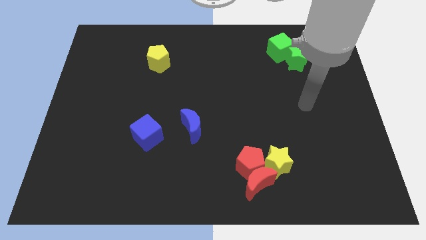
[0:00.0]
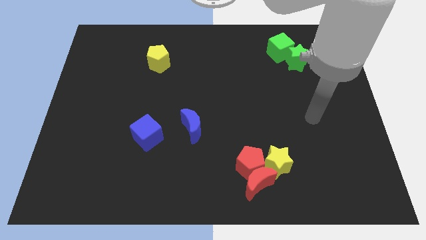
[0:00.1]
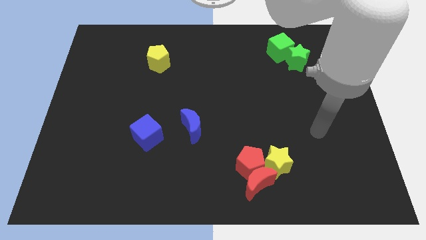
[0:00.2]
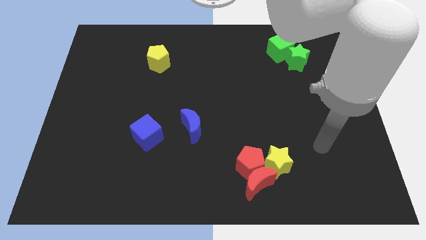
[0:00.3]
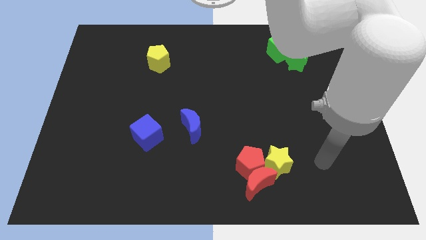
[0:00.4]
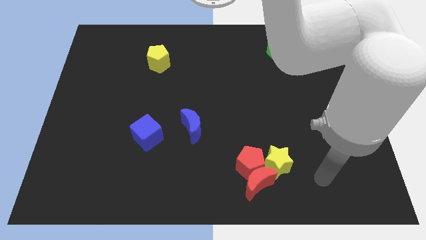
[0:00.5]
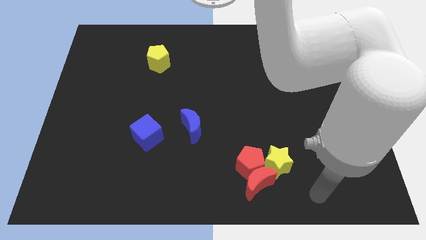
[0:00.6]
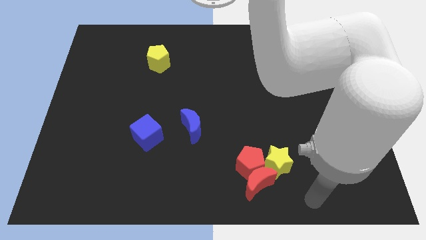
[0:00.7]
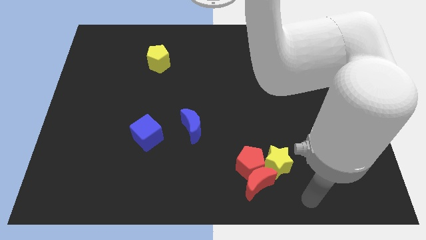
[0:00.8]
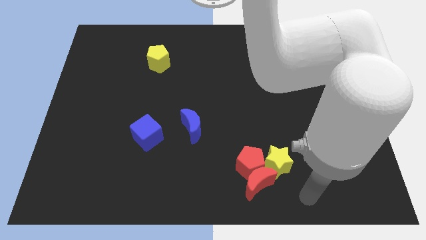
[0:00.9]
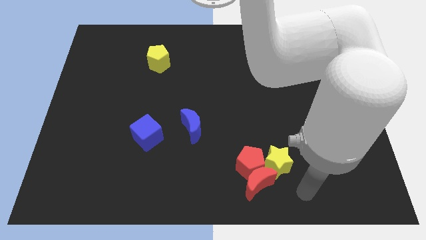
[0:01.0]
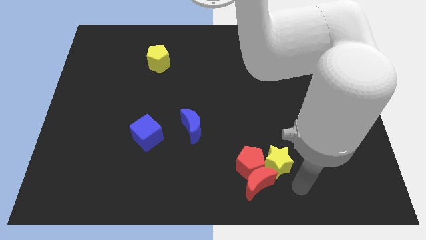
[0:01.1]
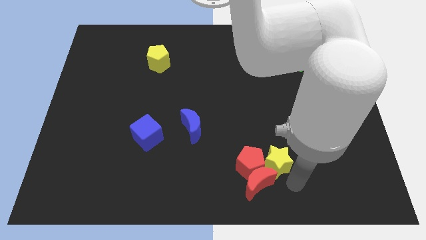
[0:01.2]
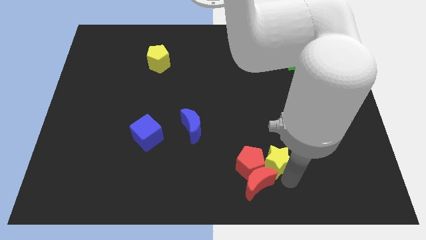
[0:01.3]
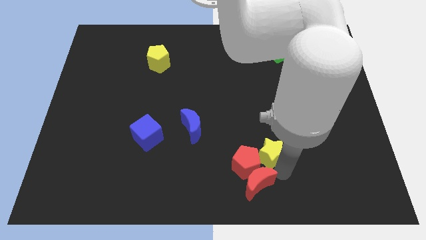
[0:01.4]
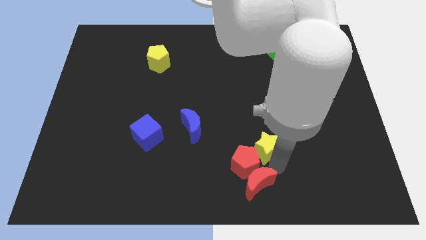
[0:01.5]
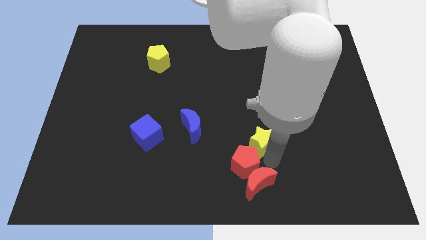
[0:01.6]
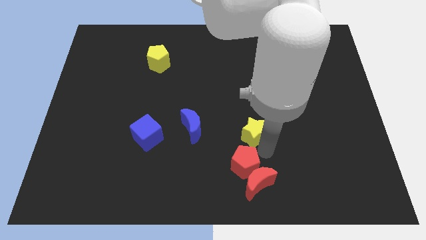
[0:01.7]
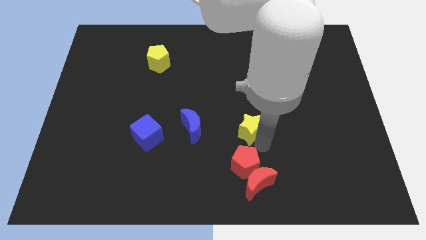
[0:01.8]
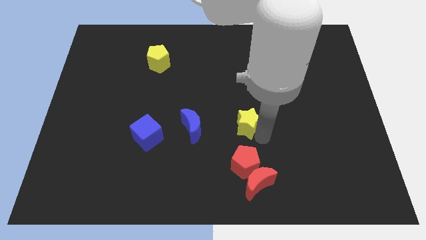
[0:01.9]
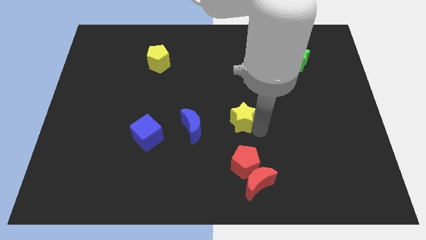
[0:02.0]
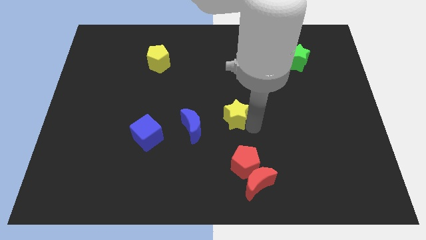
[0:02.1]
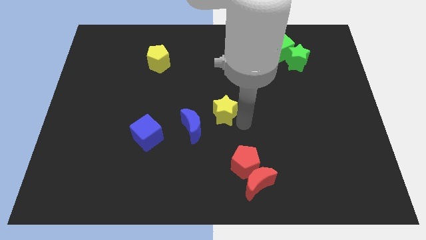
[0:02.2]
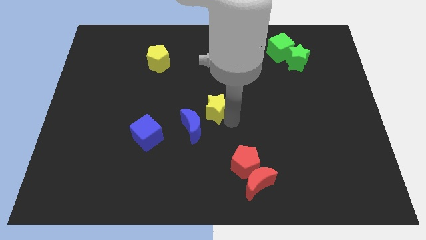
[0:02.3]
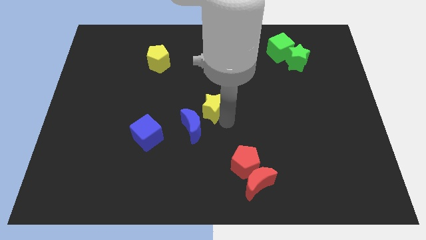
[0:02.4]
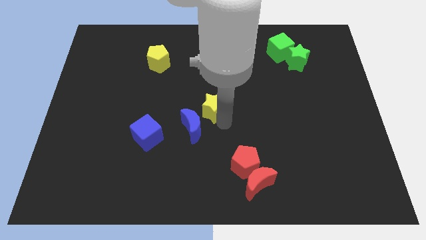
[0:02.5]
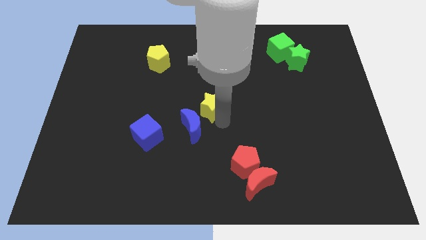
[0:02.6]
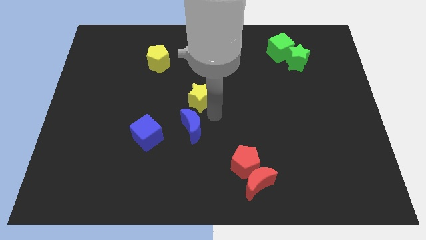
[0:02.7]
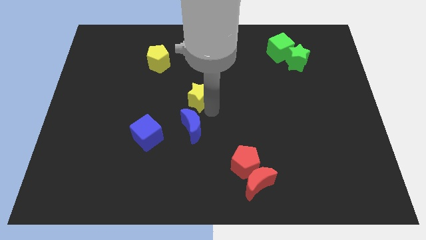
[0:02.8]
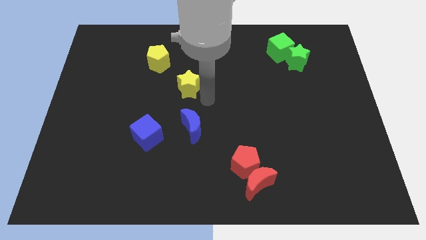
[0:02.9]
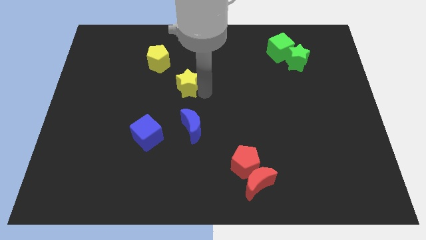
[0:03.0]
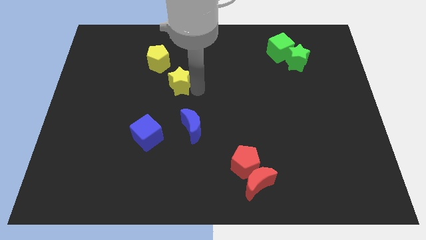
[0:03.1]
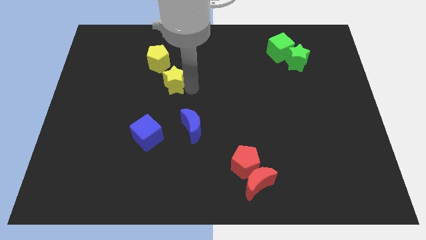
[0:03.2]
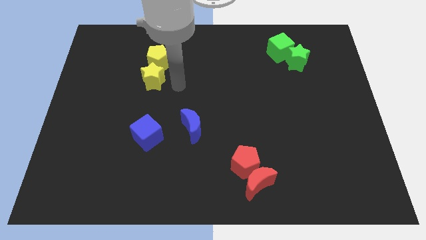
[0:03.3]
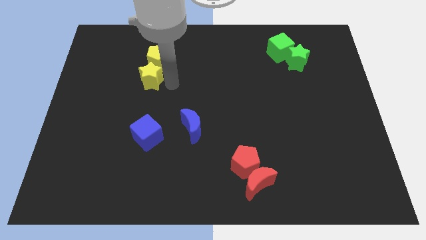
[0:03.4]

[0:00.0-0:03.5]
place the yellow star below the yellow pentagon

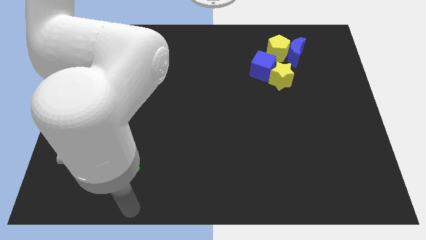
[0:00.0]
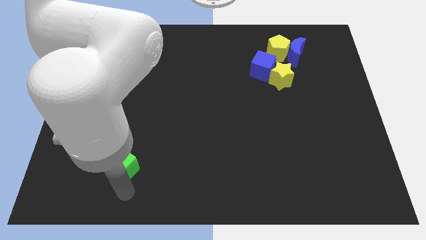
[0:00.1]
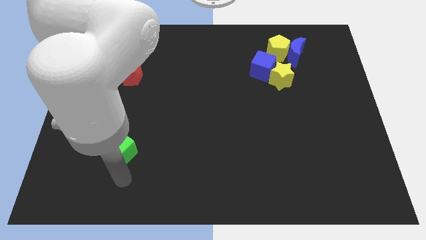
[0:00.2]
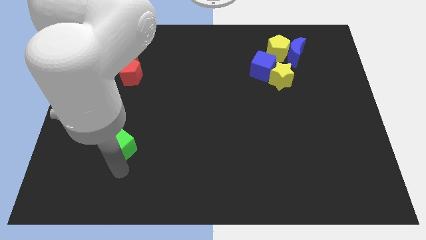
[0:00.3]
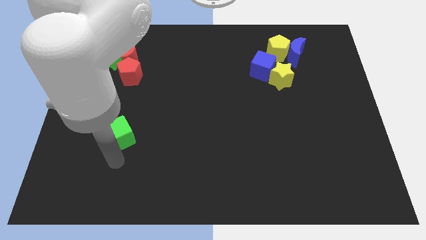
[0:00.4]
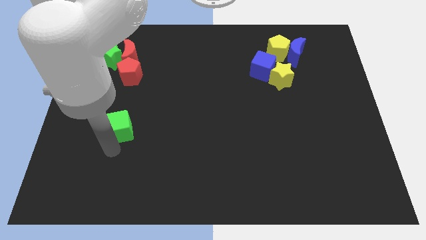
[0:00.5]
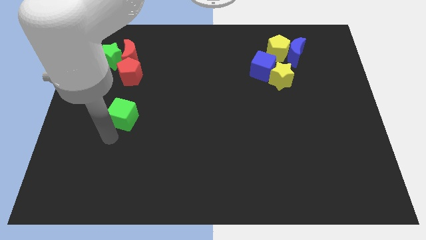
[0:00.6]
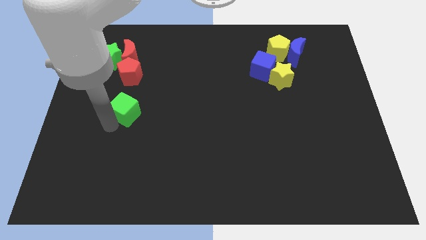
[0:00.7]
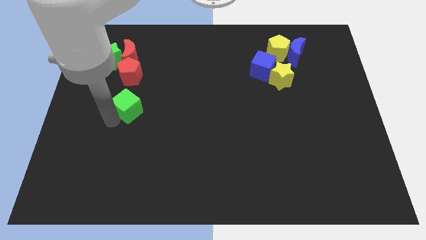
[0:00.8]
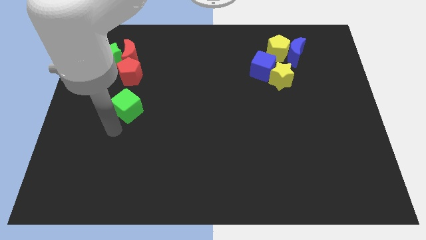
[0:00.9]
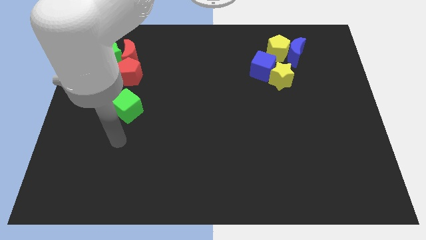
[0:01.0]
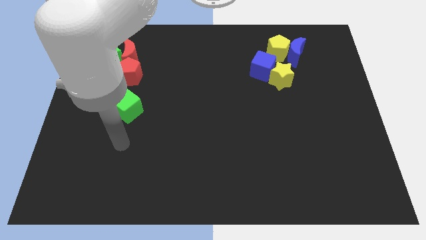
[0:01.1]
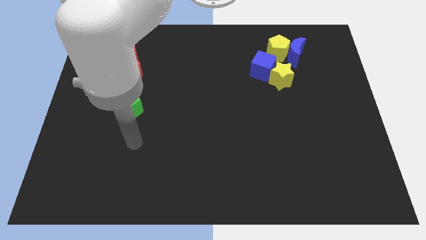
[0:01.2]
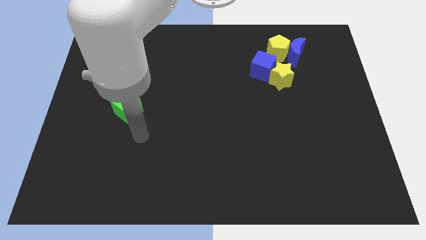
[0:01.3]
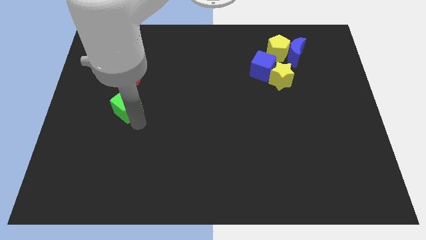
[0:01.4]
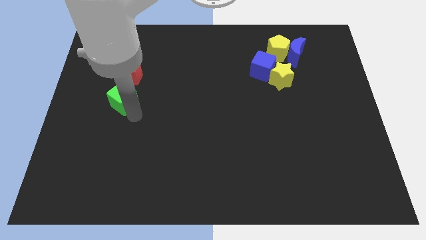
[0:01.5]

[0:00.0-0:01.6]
move the green cube slightly towards up

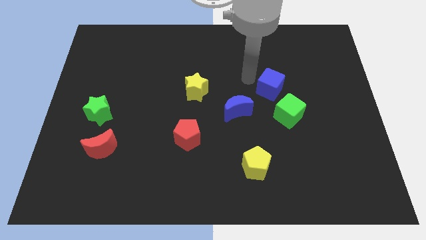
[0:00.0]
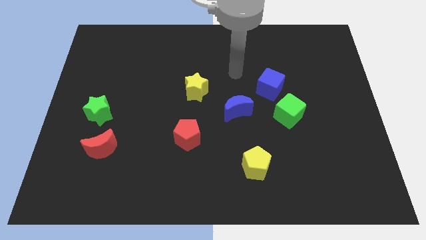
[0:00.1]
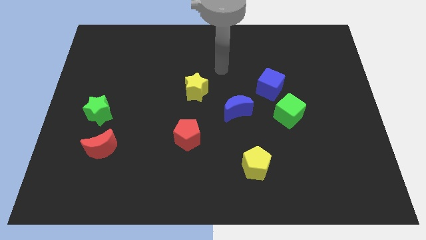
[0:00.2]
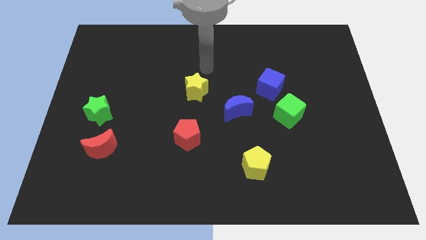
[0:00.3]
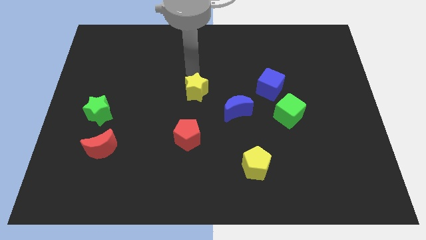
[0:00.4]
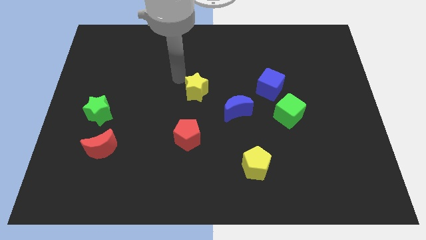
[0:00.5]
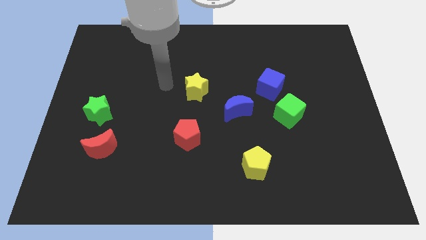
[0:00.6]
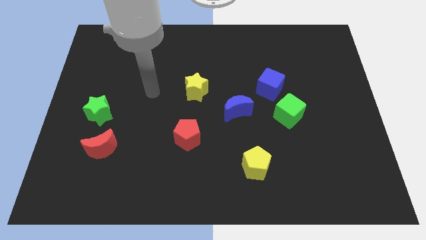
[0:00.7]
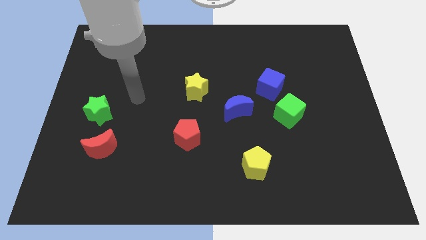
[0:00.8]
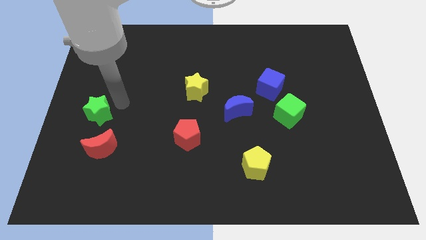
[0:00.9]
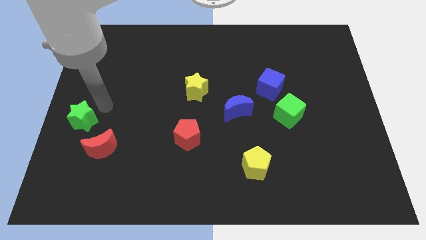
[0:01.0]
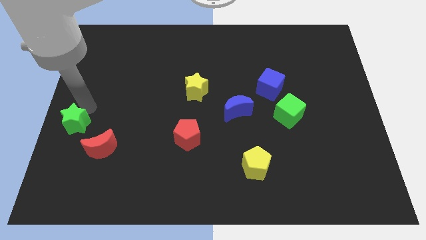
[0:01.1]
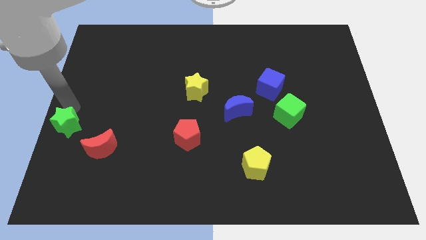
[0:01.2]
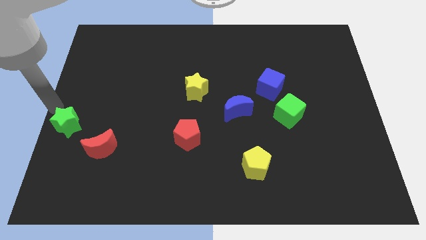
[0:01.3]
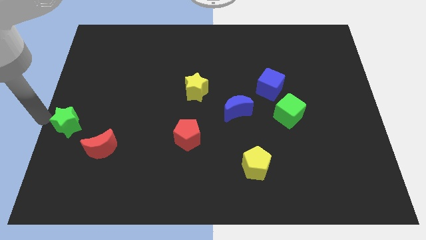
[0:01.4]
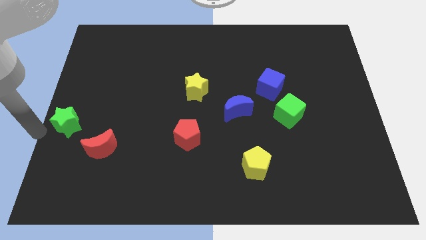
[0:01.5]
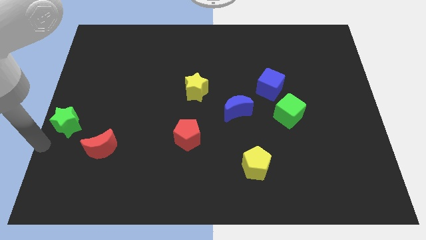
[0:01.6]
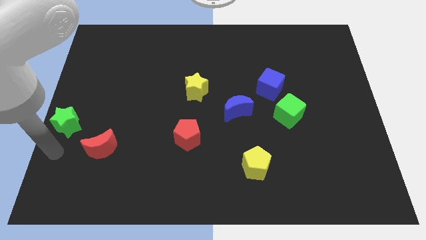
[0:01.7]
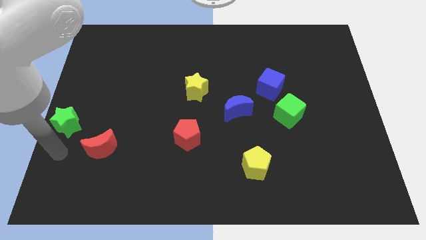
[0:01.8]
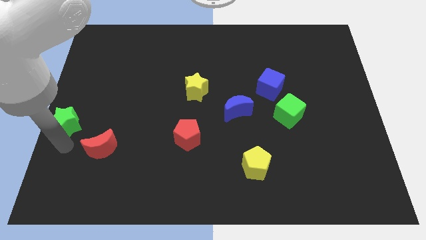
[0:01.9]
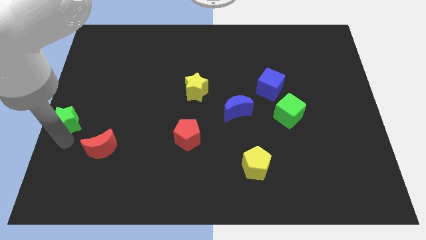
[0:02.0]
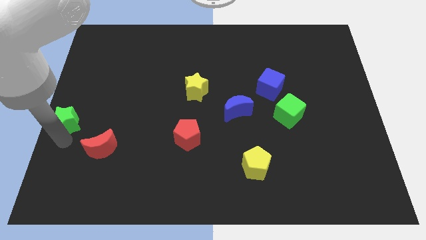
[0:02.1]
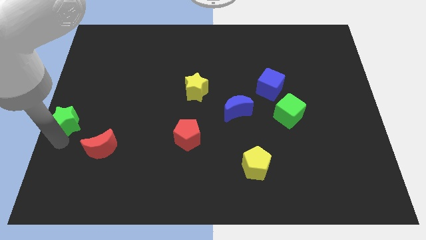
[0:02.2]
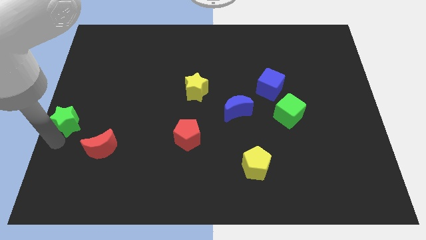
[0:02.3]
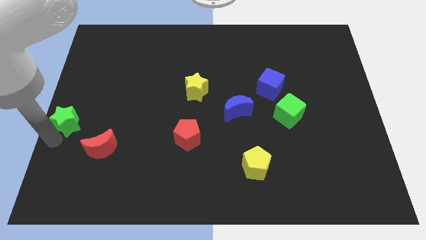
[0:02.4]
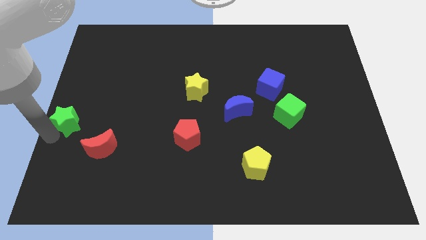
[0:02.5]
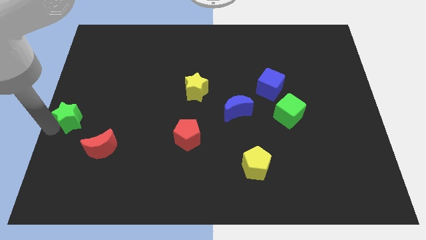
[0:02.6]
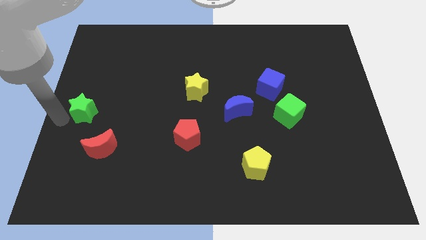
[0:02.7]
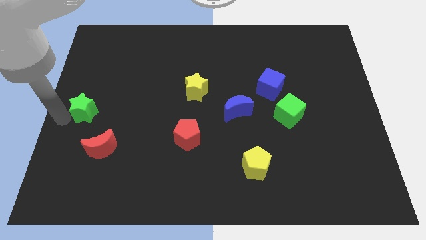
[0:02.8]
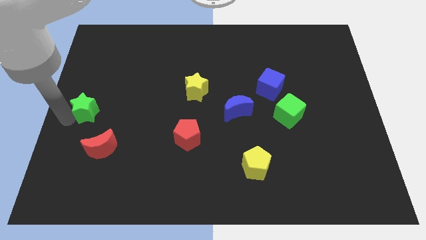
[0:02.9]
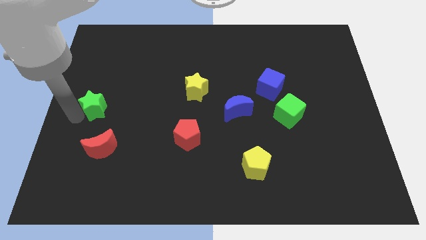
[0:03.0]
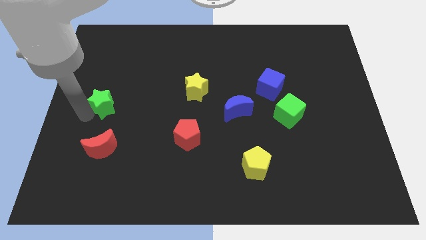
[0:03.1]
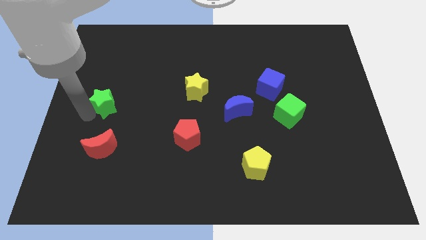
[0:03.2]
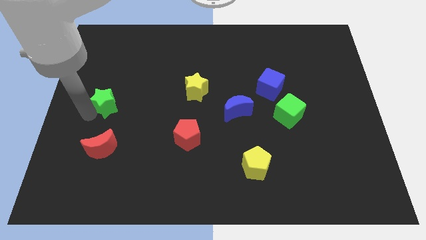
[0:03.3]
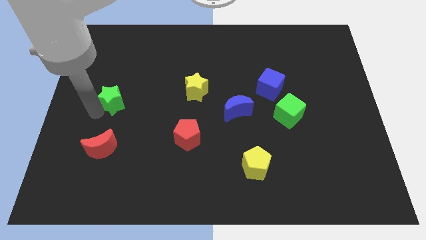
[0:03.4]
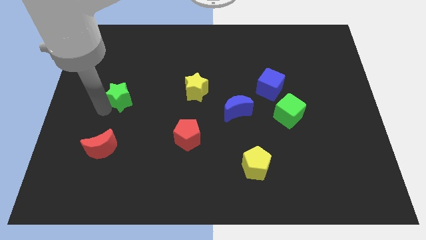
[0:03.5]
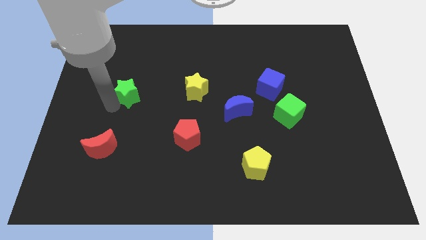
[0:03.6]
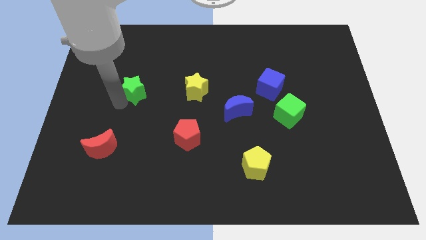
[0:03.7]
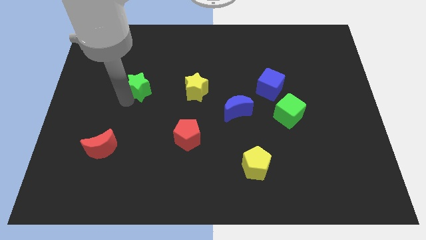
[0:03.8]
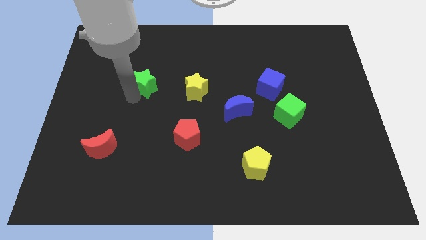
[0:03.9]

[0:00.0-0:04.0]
move the green star left to the yellow star
